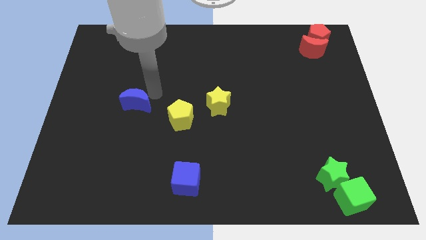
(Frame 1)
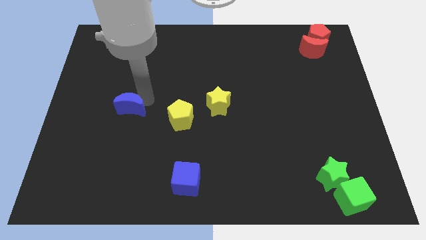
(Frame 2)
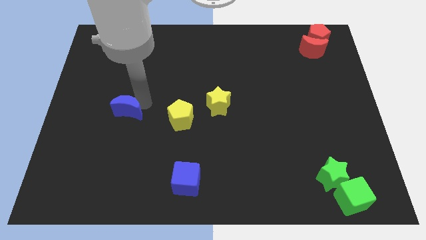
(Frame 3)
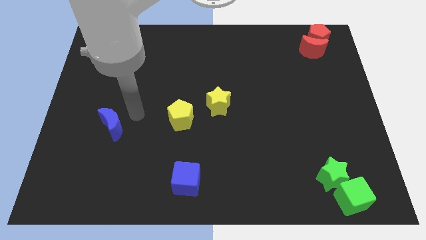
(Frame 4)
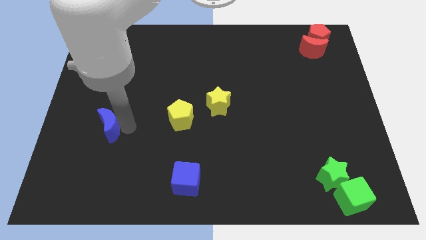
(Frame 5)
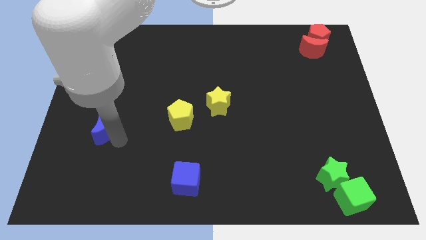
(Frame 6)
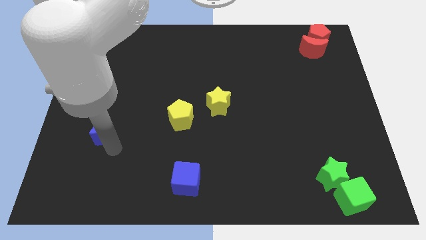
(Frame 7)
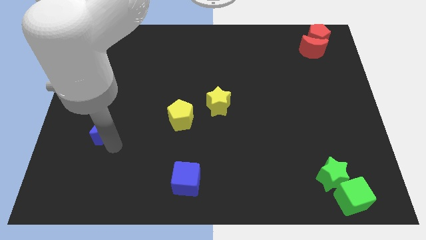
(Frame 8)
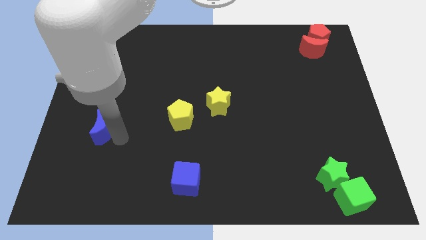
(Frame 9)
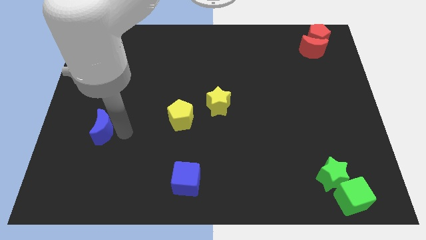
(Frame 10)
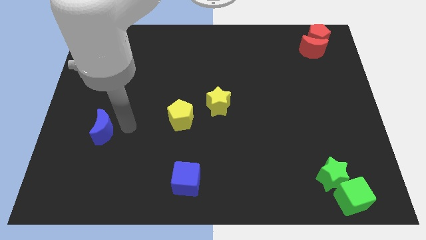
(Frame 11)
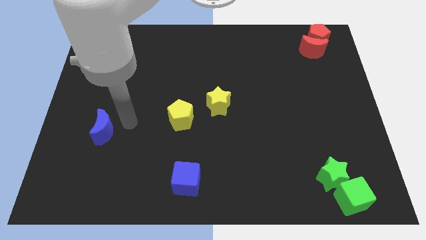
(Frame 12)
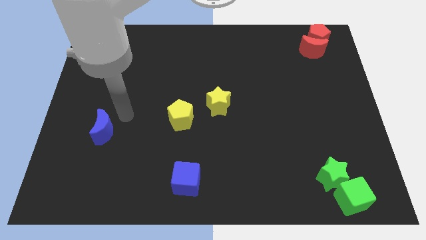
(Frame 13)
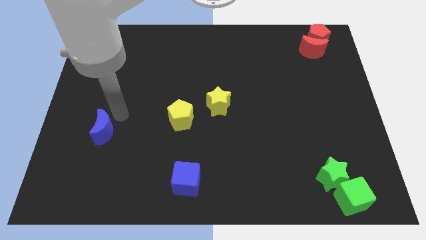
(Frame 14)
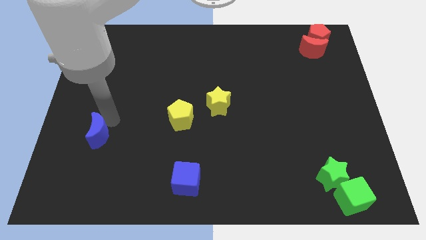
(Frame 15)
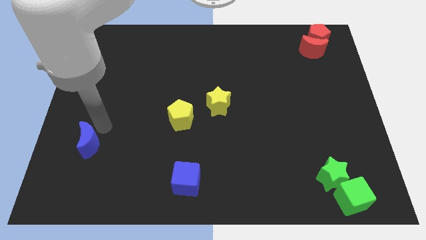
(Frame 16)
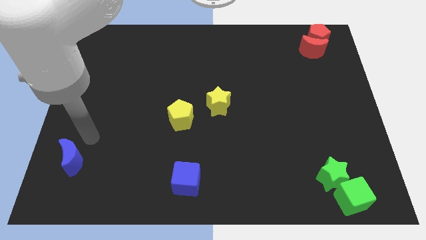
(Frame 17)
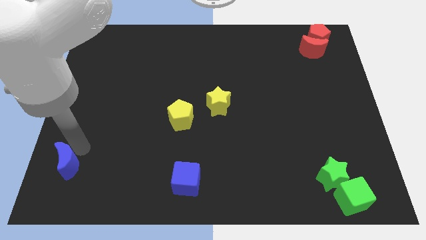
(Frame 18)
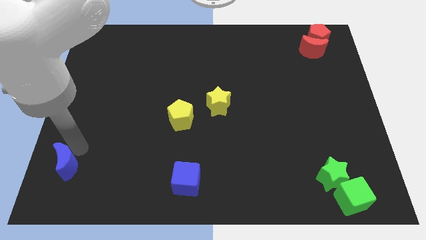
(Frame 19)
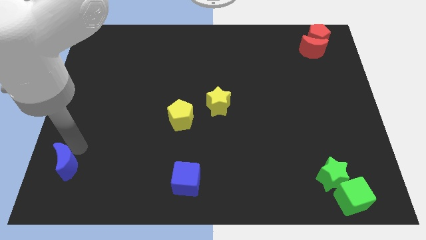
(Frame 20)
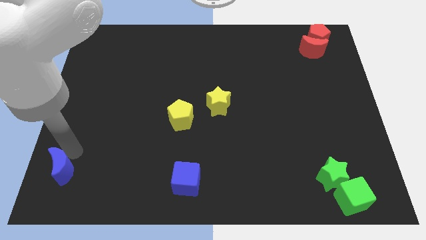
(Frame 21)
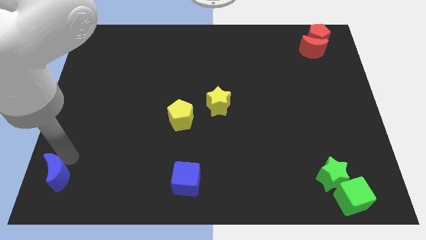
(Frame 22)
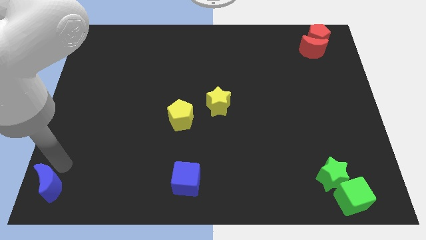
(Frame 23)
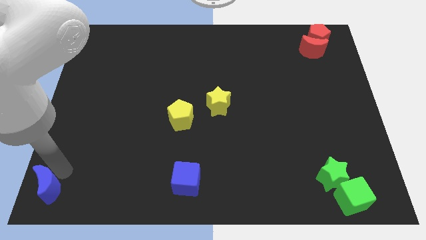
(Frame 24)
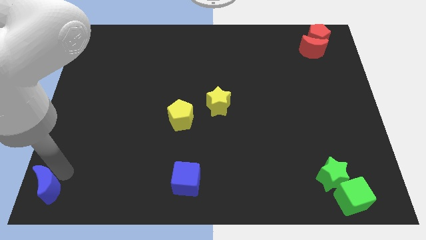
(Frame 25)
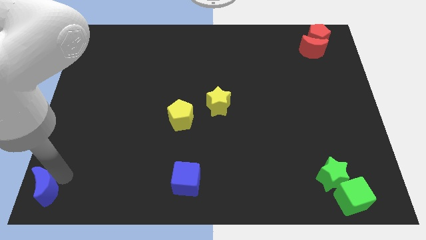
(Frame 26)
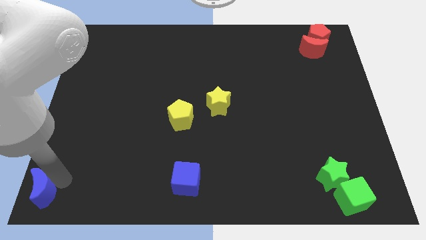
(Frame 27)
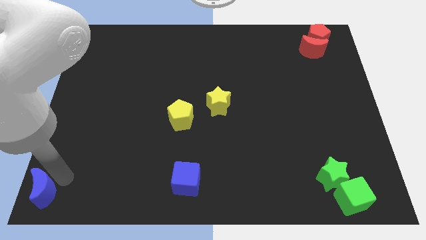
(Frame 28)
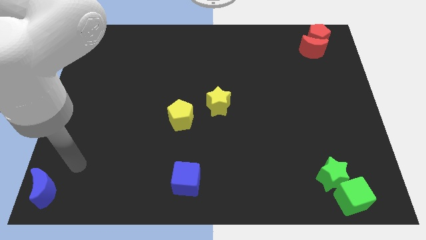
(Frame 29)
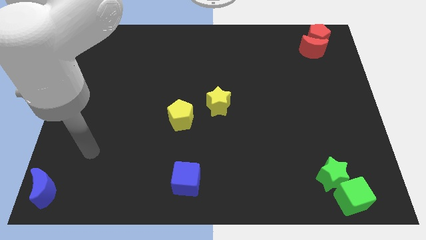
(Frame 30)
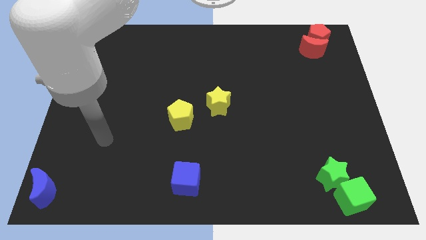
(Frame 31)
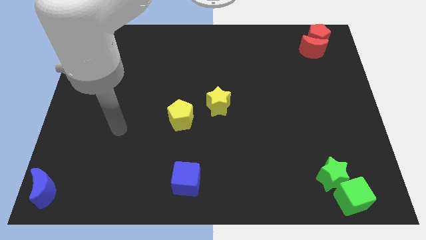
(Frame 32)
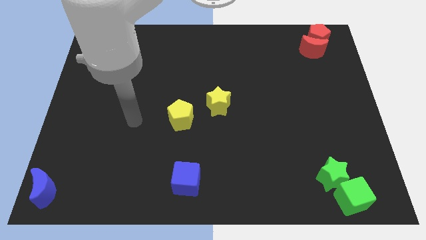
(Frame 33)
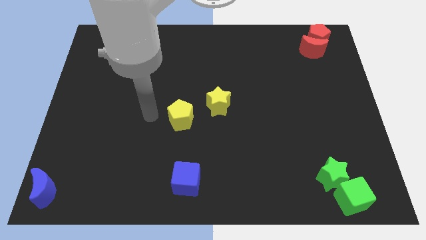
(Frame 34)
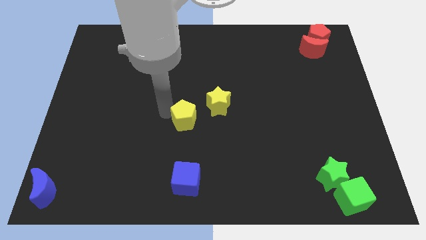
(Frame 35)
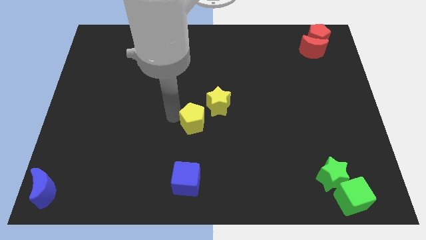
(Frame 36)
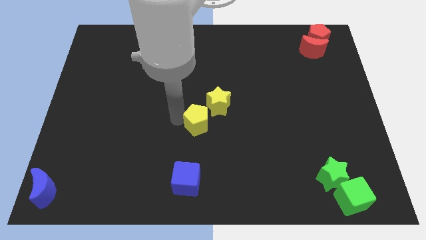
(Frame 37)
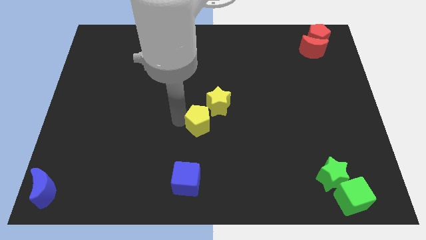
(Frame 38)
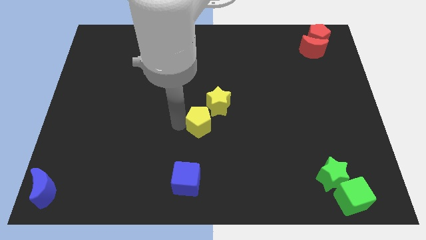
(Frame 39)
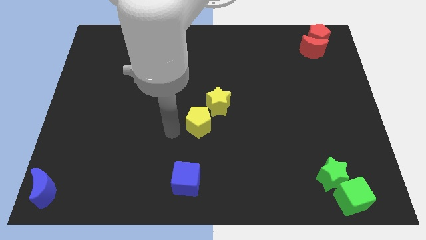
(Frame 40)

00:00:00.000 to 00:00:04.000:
place the blue crescent to bottom corner of the board

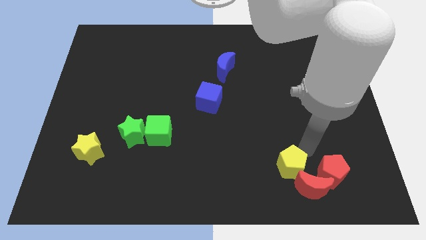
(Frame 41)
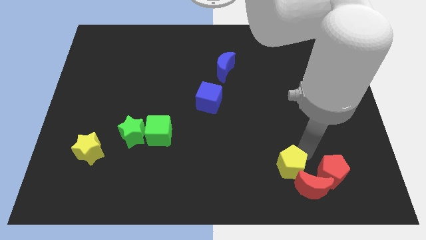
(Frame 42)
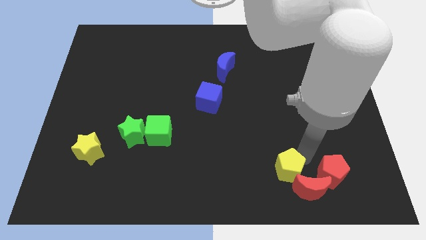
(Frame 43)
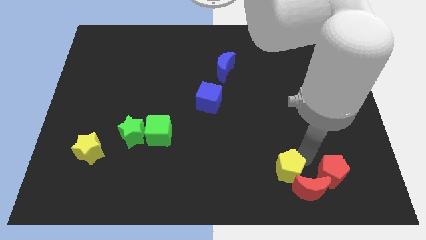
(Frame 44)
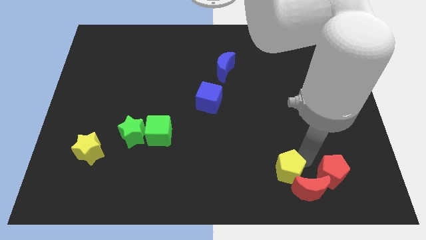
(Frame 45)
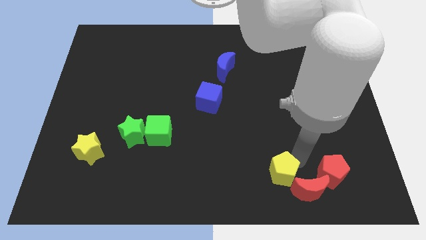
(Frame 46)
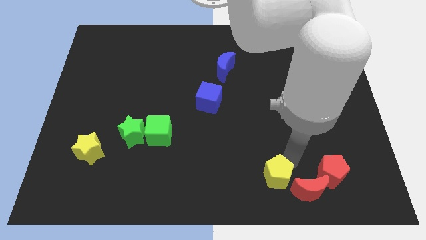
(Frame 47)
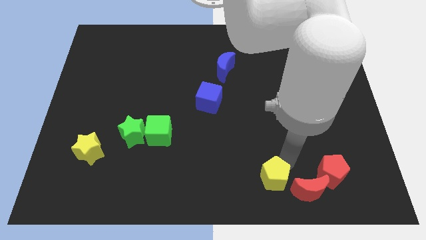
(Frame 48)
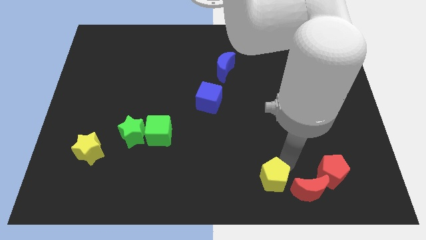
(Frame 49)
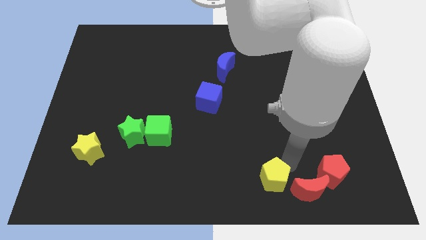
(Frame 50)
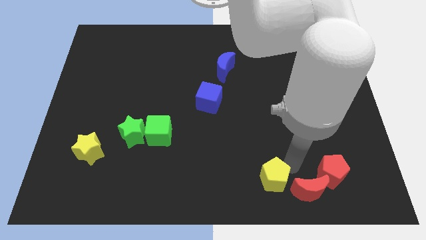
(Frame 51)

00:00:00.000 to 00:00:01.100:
place the yellow pentagon parallel to the left side of the red pentagon

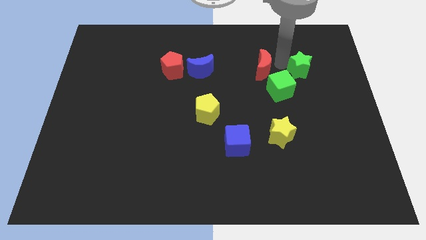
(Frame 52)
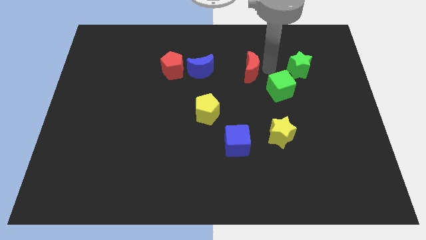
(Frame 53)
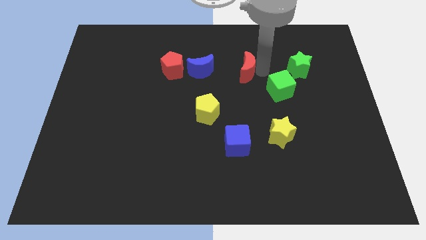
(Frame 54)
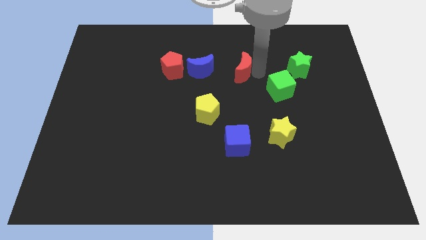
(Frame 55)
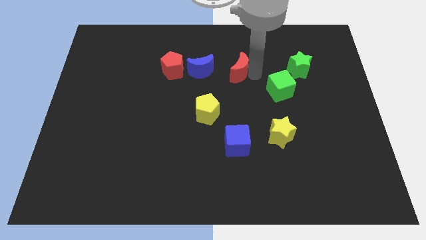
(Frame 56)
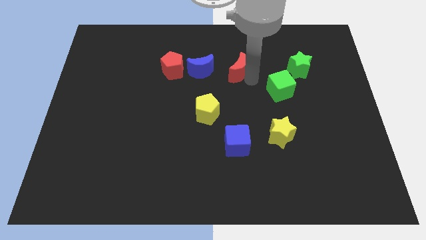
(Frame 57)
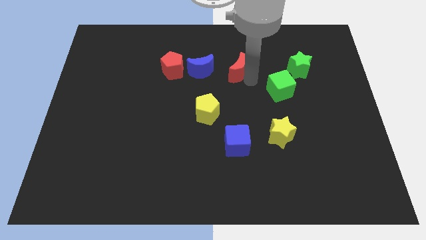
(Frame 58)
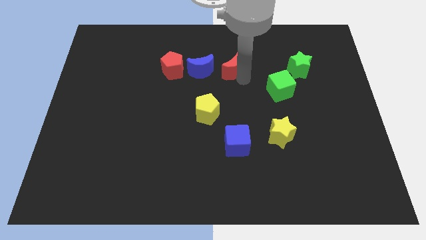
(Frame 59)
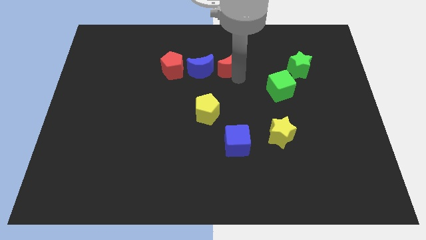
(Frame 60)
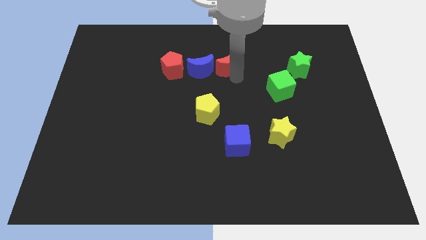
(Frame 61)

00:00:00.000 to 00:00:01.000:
push the red moon right to the blue moon

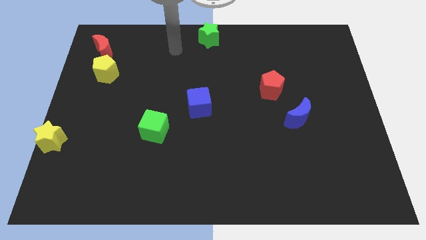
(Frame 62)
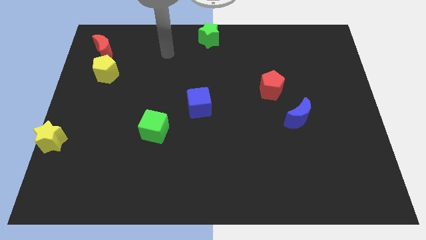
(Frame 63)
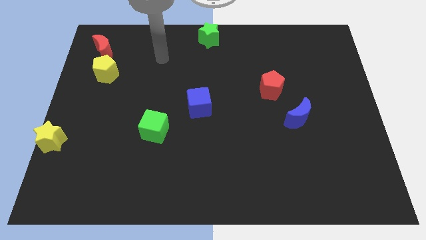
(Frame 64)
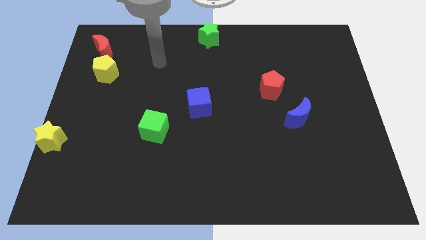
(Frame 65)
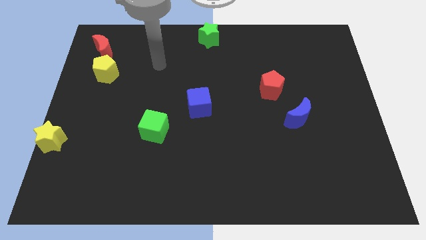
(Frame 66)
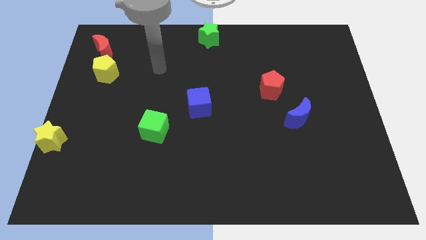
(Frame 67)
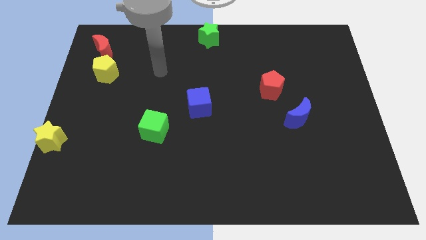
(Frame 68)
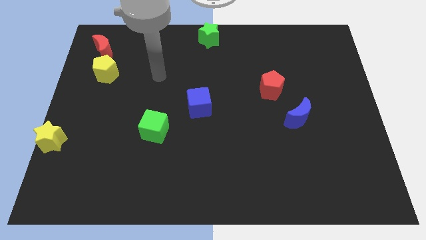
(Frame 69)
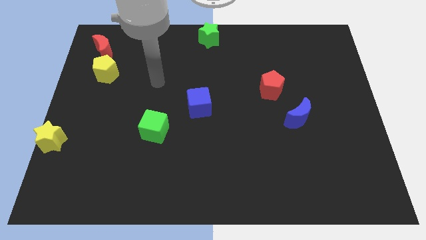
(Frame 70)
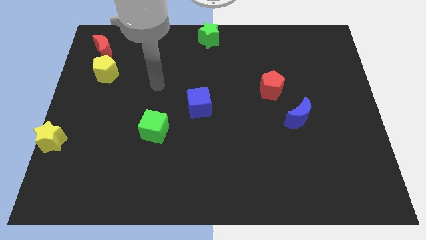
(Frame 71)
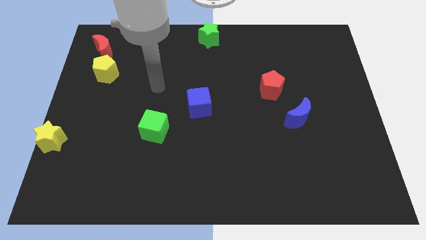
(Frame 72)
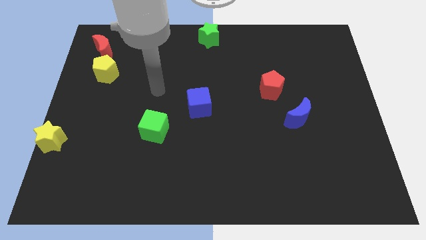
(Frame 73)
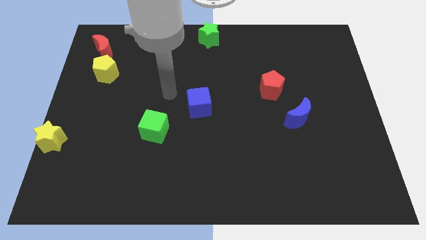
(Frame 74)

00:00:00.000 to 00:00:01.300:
point your arm at the left of the blue cube

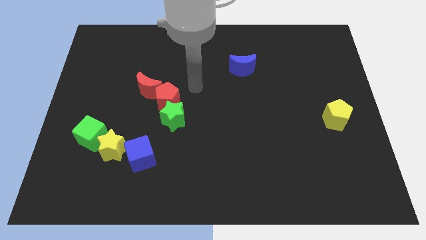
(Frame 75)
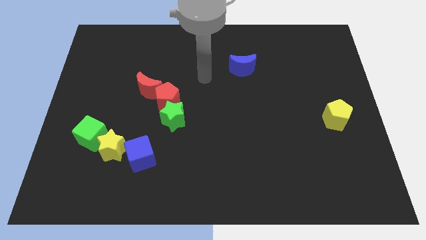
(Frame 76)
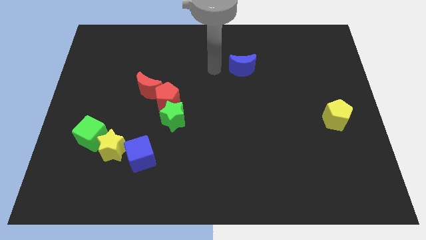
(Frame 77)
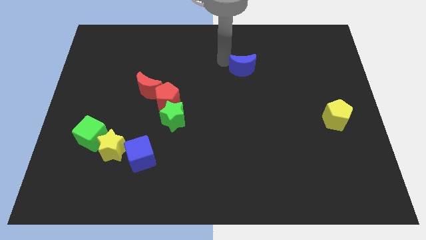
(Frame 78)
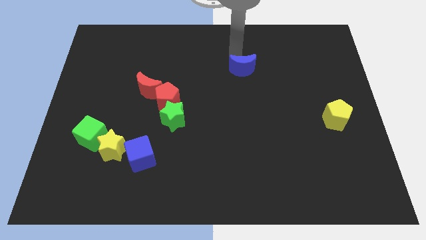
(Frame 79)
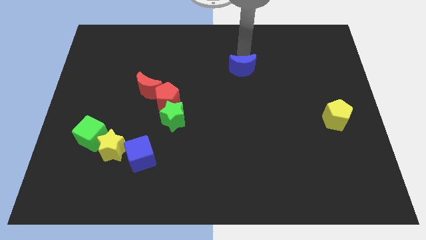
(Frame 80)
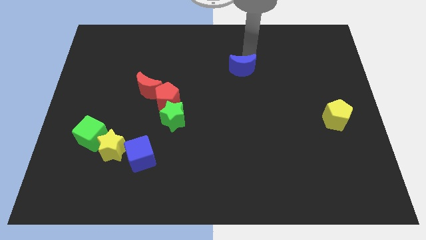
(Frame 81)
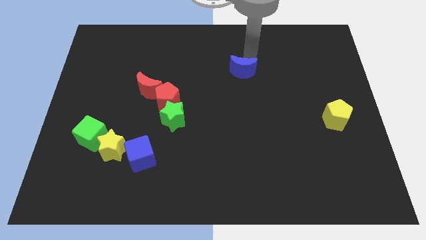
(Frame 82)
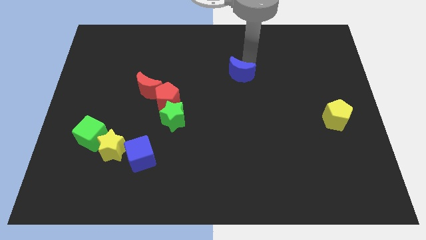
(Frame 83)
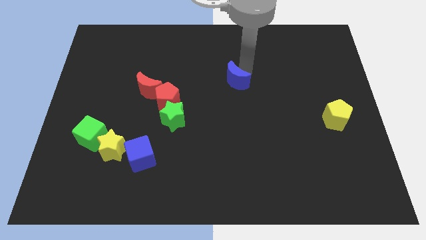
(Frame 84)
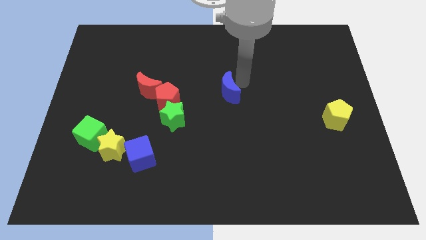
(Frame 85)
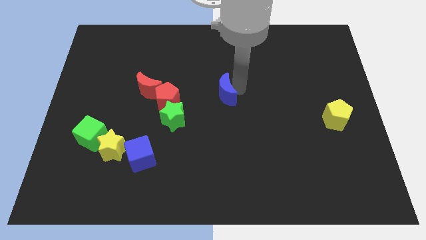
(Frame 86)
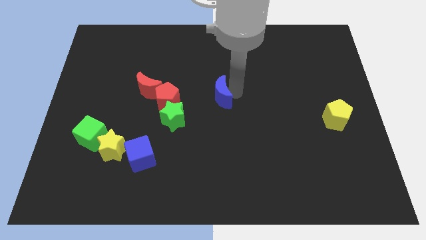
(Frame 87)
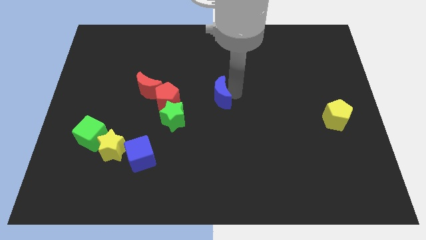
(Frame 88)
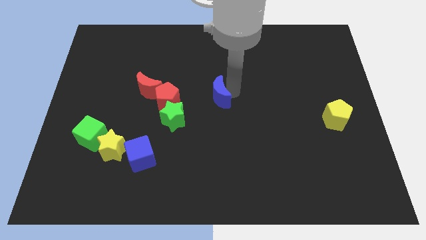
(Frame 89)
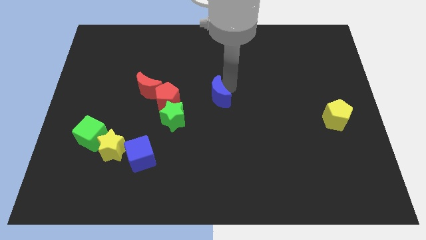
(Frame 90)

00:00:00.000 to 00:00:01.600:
push the blue crescent in the center of the board
